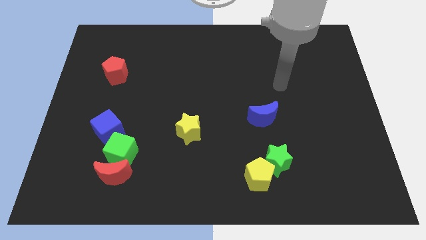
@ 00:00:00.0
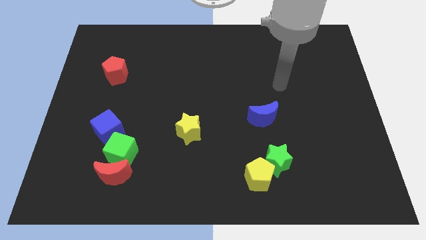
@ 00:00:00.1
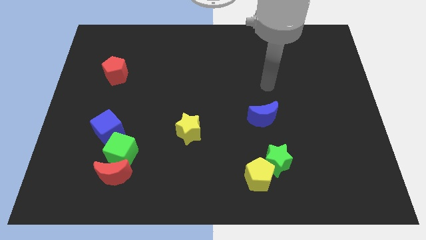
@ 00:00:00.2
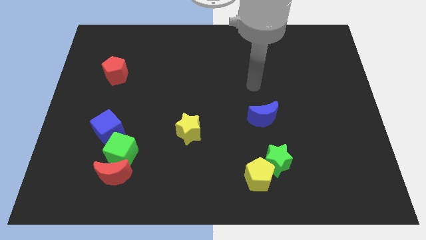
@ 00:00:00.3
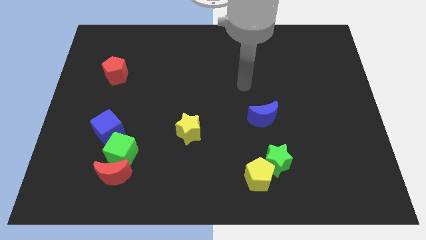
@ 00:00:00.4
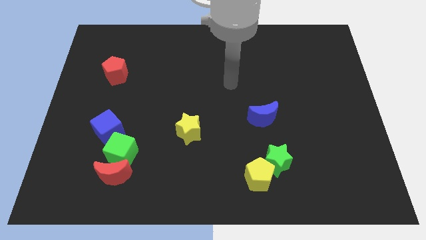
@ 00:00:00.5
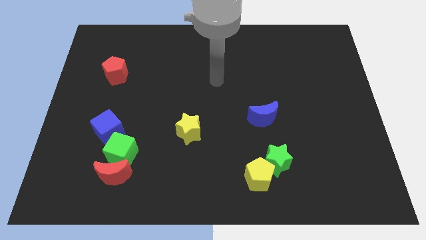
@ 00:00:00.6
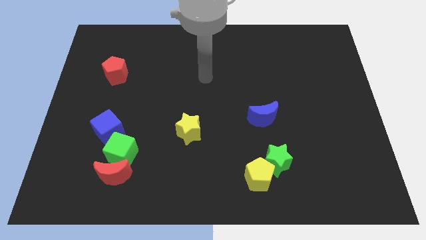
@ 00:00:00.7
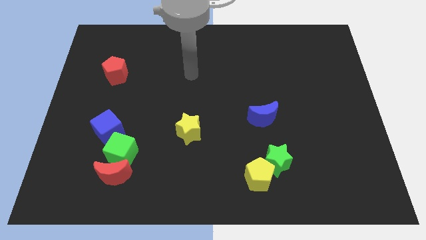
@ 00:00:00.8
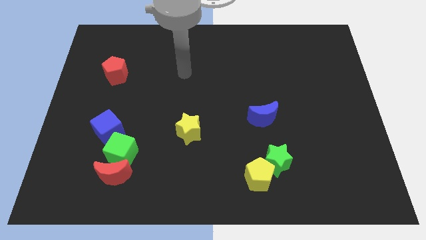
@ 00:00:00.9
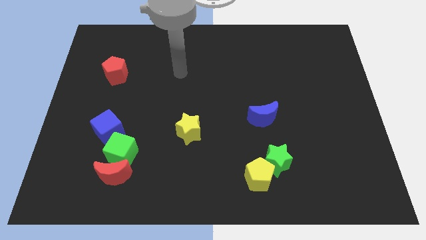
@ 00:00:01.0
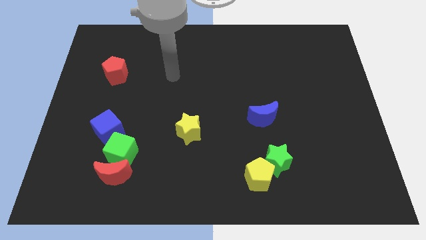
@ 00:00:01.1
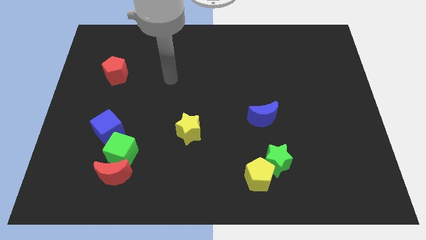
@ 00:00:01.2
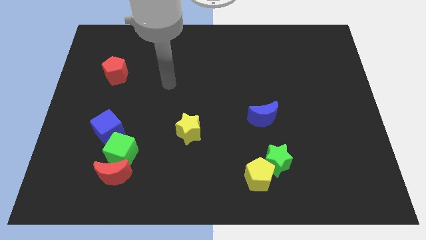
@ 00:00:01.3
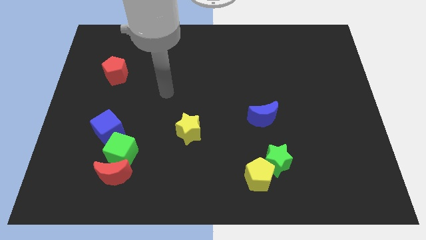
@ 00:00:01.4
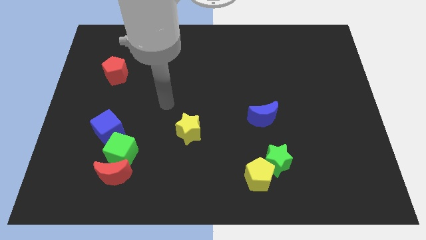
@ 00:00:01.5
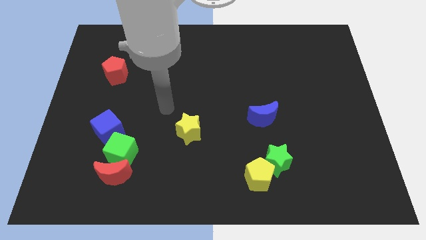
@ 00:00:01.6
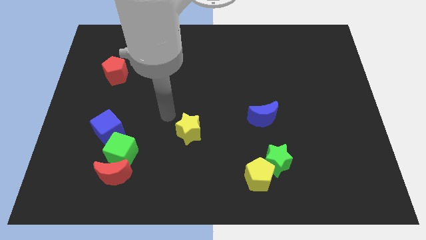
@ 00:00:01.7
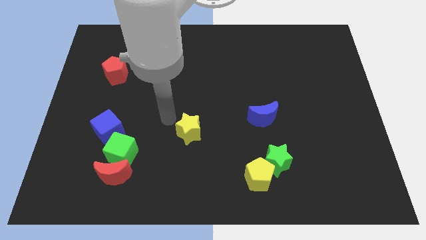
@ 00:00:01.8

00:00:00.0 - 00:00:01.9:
place your arm left of yellow star

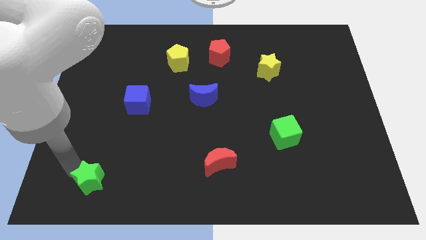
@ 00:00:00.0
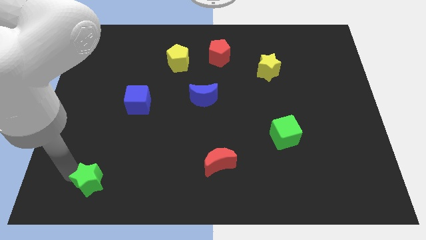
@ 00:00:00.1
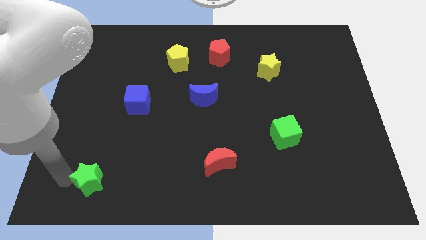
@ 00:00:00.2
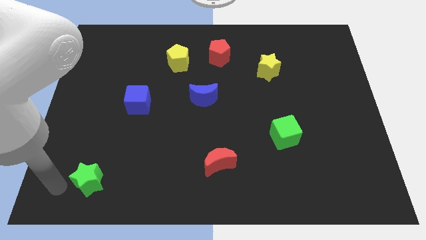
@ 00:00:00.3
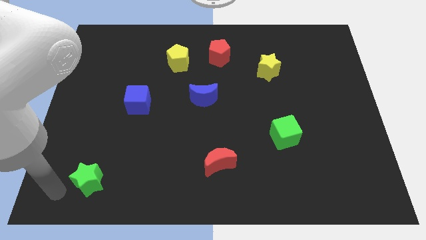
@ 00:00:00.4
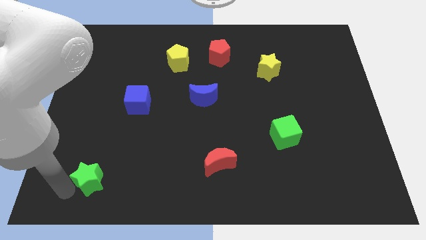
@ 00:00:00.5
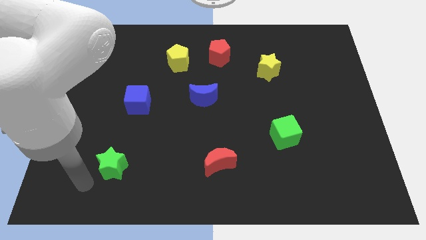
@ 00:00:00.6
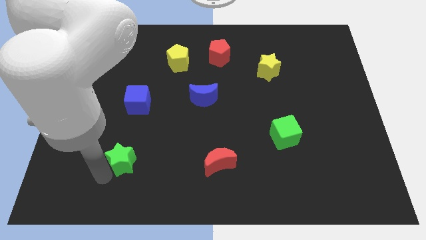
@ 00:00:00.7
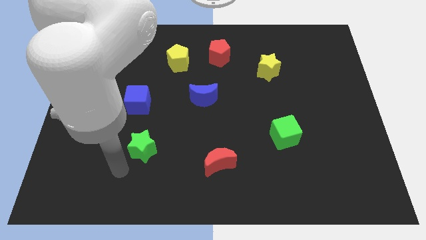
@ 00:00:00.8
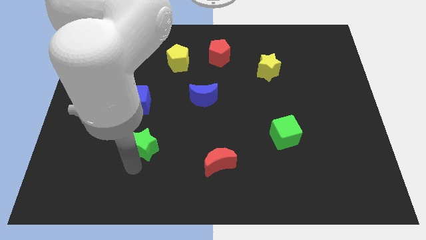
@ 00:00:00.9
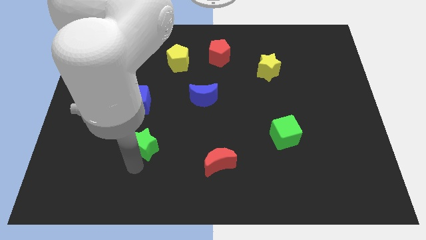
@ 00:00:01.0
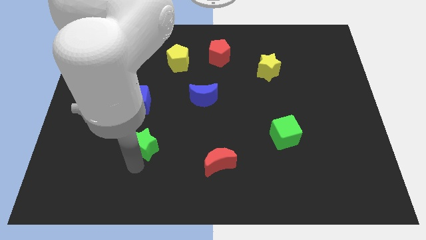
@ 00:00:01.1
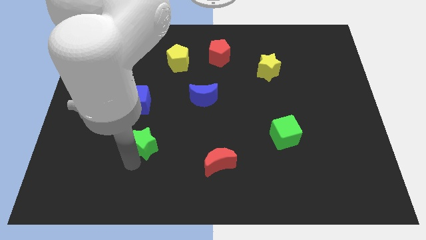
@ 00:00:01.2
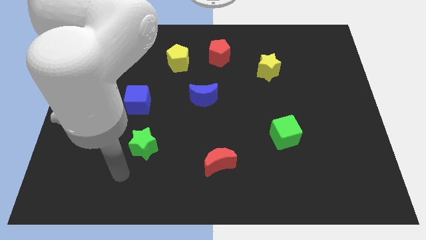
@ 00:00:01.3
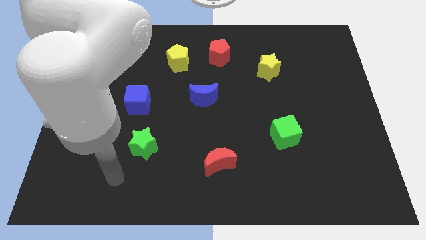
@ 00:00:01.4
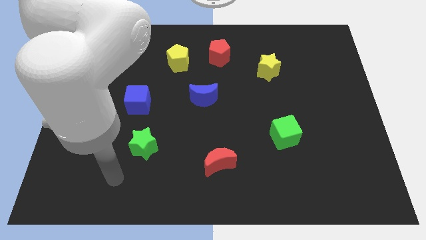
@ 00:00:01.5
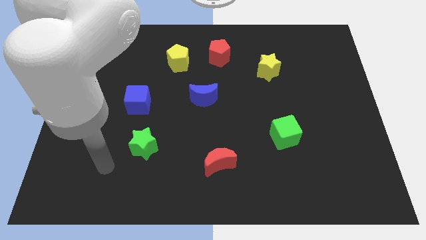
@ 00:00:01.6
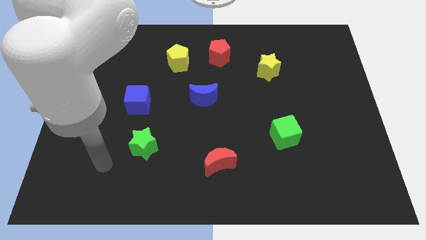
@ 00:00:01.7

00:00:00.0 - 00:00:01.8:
place the green star below the blue cube

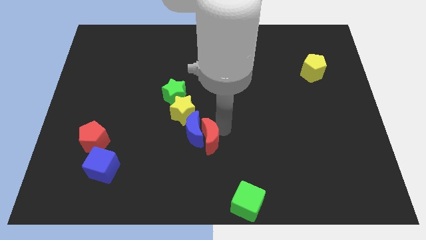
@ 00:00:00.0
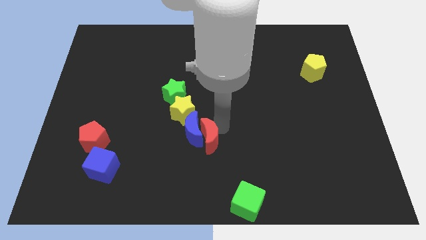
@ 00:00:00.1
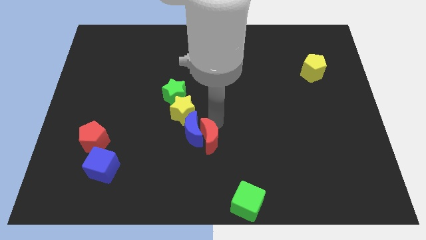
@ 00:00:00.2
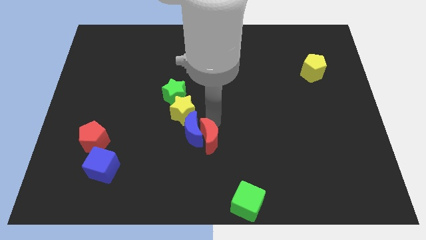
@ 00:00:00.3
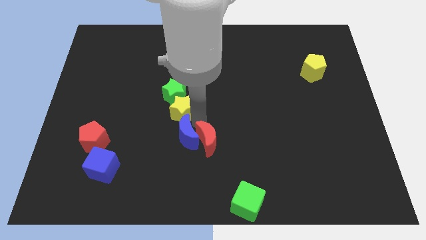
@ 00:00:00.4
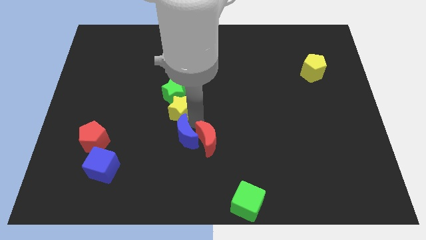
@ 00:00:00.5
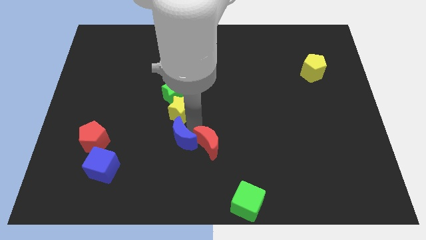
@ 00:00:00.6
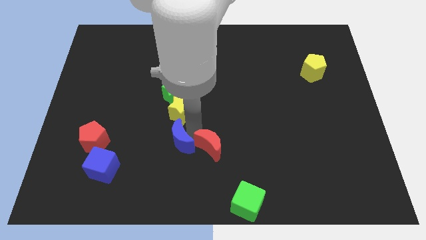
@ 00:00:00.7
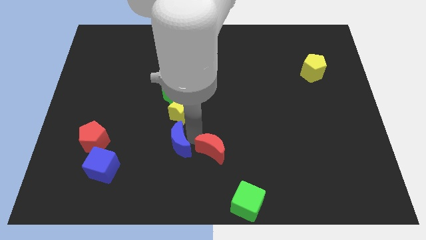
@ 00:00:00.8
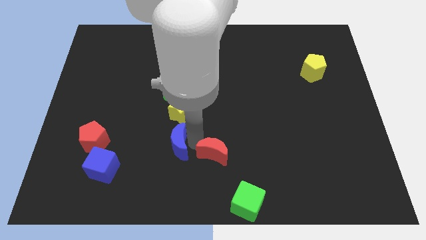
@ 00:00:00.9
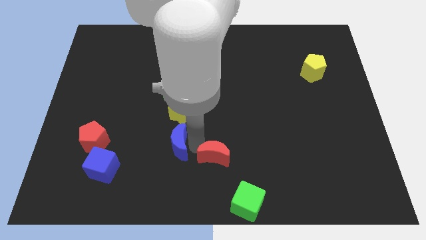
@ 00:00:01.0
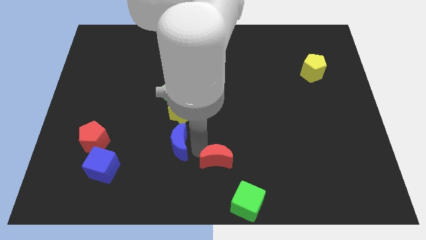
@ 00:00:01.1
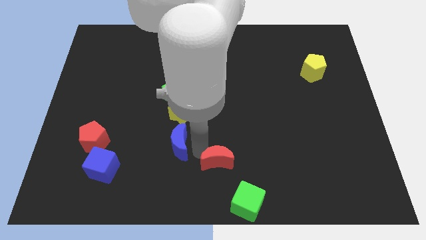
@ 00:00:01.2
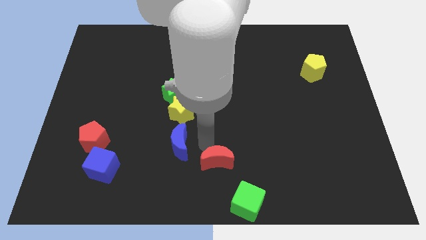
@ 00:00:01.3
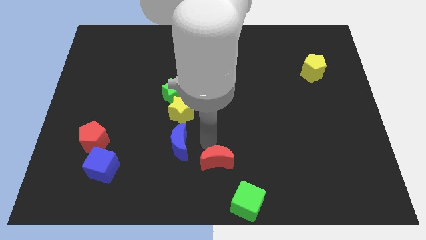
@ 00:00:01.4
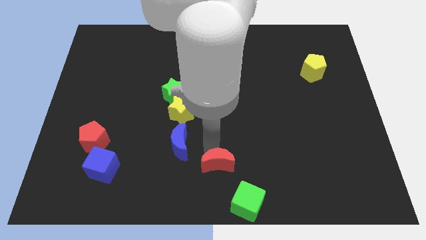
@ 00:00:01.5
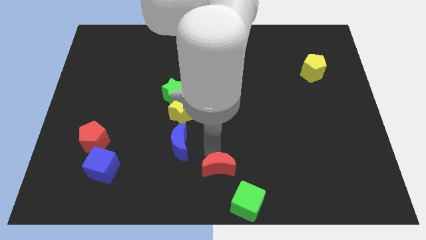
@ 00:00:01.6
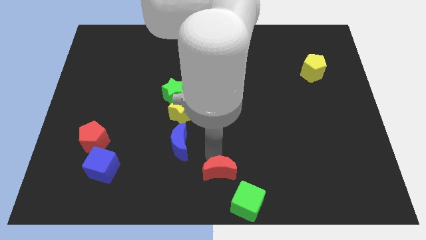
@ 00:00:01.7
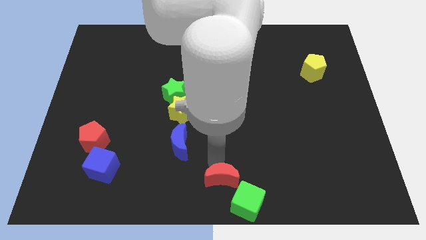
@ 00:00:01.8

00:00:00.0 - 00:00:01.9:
separate red moon and blue moon

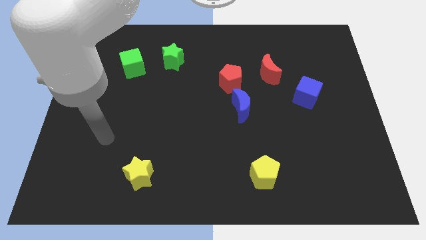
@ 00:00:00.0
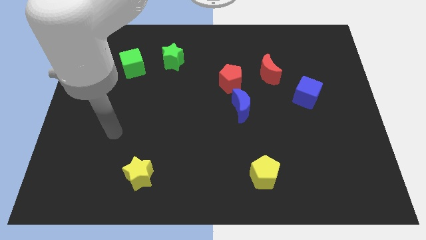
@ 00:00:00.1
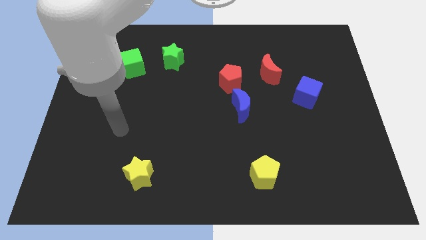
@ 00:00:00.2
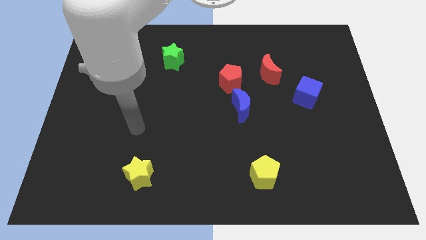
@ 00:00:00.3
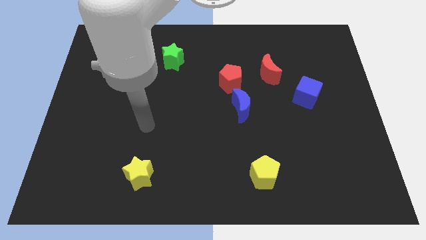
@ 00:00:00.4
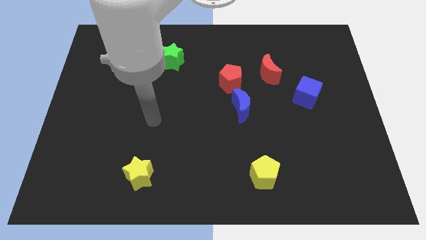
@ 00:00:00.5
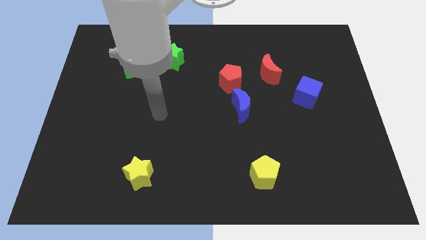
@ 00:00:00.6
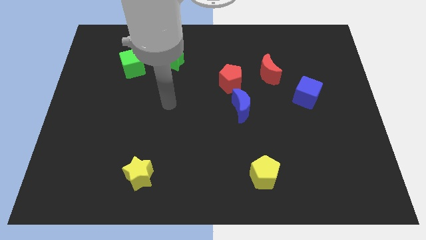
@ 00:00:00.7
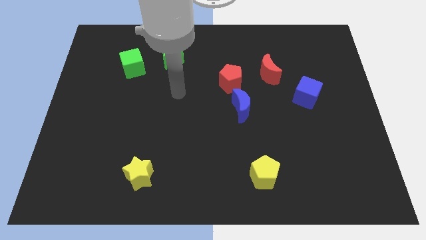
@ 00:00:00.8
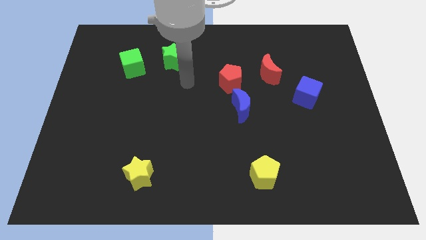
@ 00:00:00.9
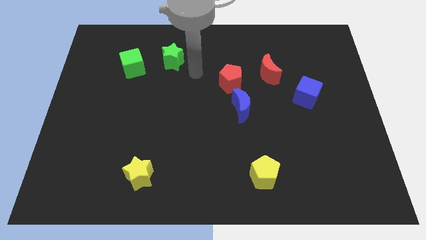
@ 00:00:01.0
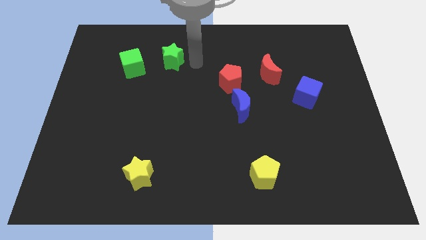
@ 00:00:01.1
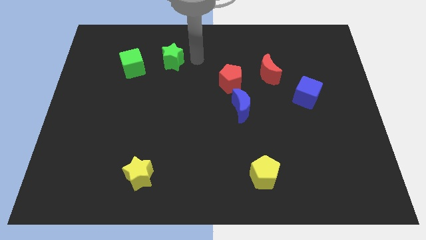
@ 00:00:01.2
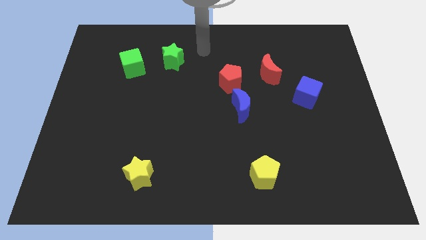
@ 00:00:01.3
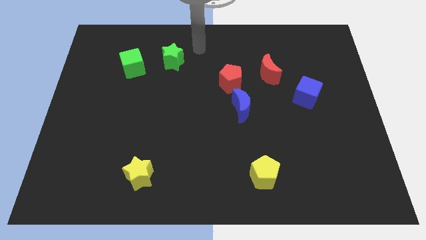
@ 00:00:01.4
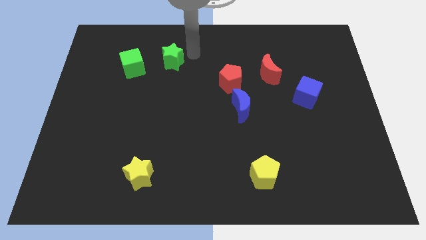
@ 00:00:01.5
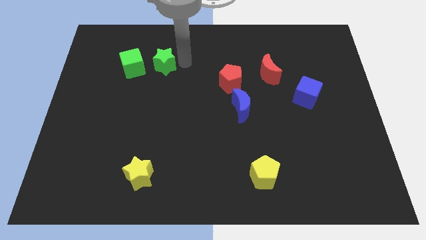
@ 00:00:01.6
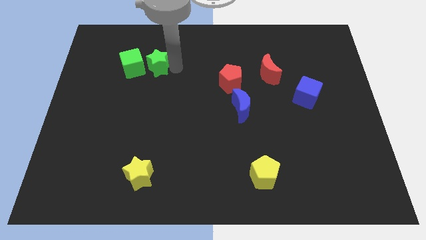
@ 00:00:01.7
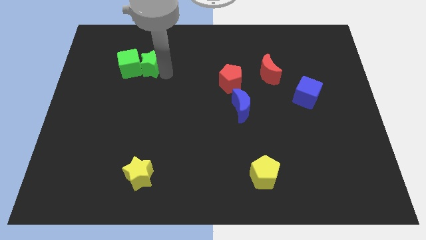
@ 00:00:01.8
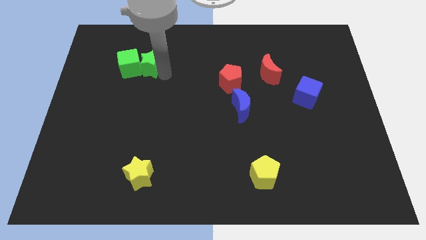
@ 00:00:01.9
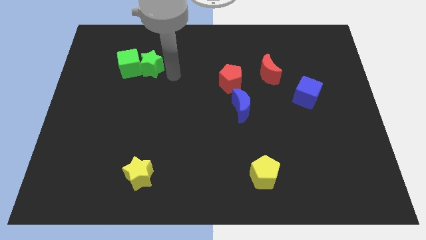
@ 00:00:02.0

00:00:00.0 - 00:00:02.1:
push the green star towards the green cube

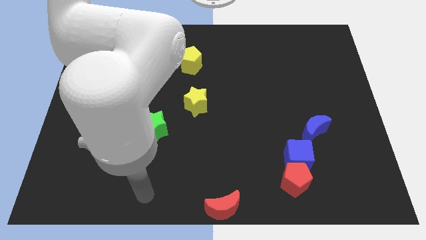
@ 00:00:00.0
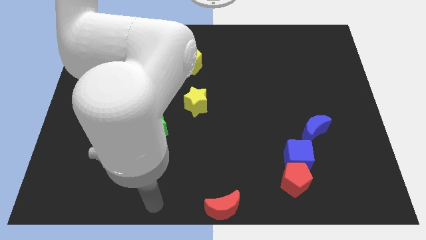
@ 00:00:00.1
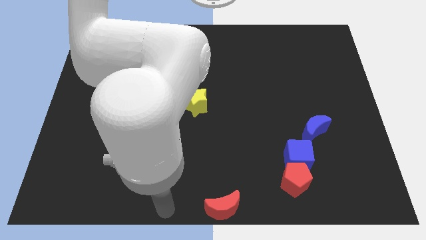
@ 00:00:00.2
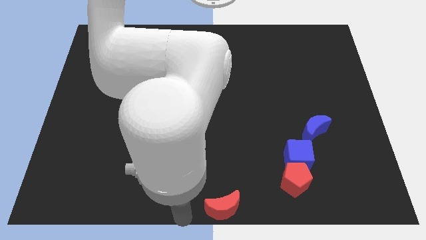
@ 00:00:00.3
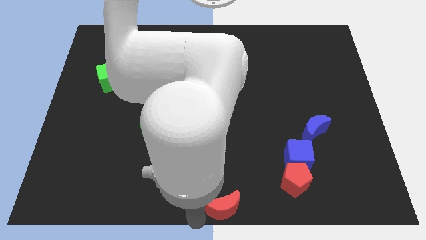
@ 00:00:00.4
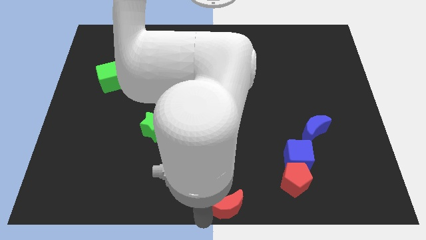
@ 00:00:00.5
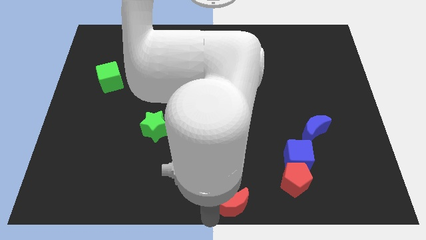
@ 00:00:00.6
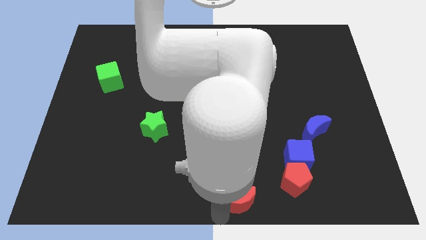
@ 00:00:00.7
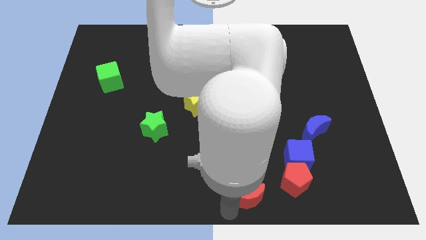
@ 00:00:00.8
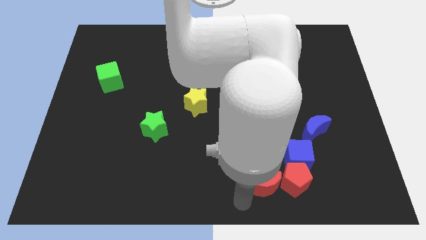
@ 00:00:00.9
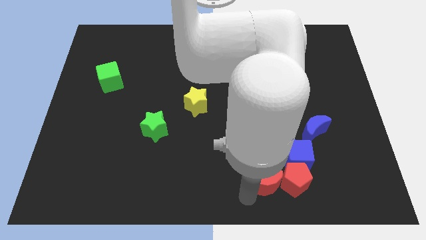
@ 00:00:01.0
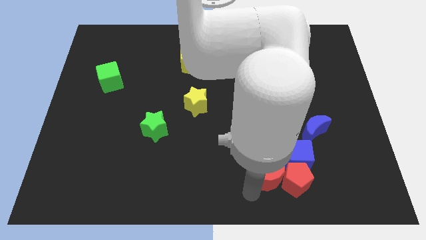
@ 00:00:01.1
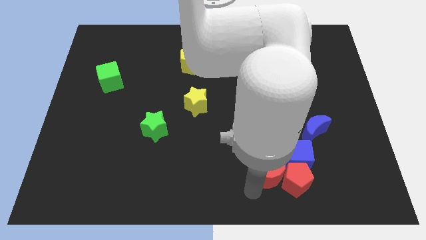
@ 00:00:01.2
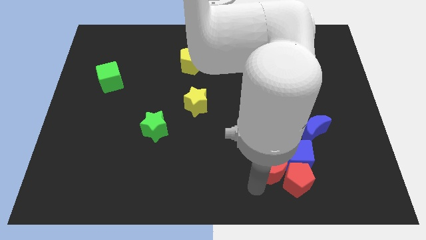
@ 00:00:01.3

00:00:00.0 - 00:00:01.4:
push the red crescent to the left of the red pentagon
